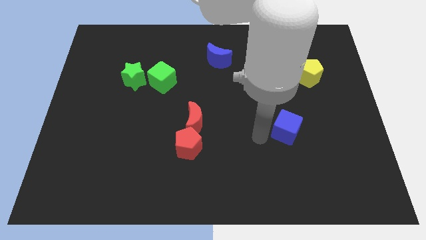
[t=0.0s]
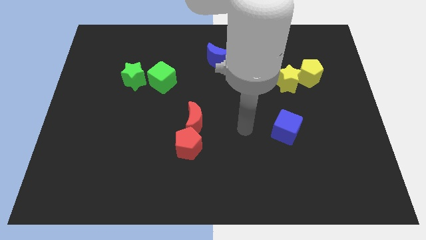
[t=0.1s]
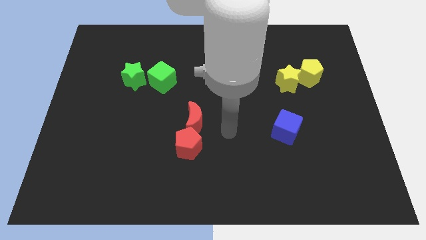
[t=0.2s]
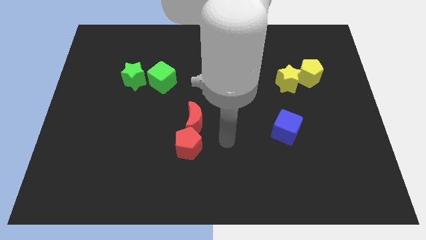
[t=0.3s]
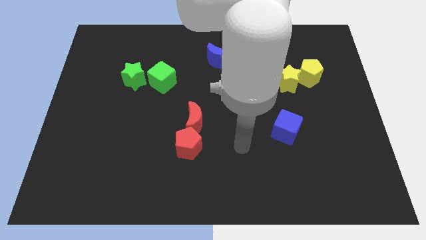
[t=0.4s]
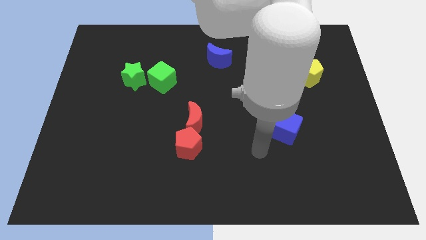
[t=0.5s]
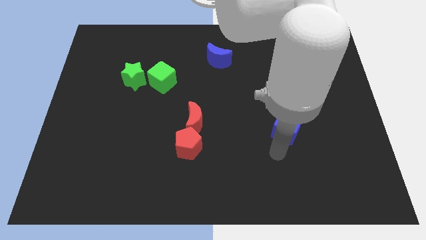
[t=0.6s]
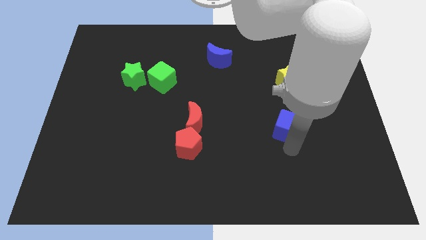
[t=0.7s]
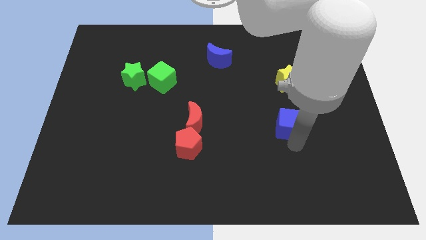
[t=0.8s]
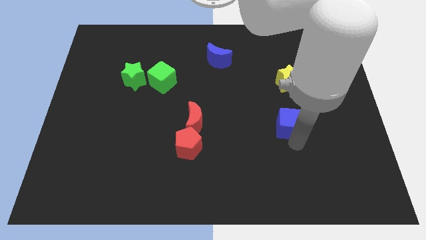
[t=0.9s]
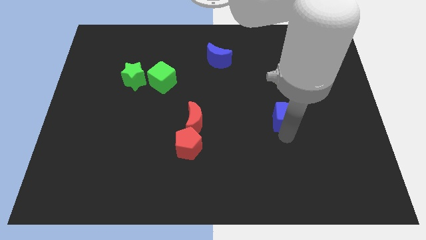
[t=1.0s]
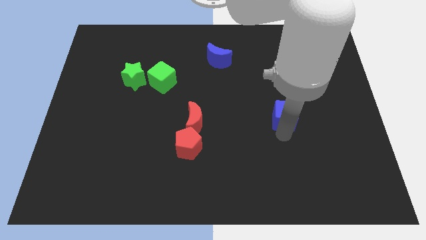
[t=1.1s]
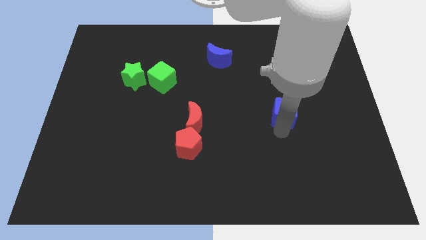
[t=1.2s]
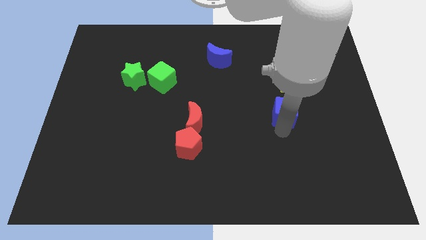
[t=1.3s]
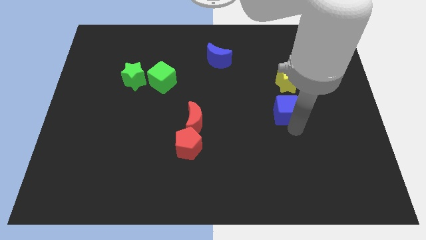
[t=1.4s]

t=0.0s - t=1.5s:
place the blue cube bellow the yellow star

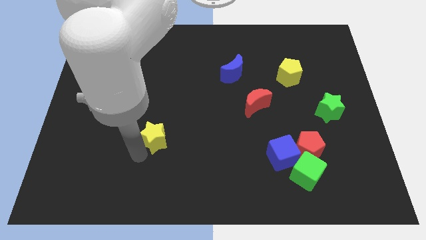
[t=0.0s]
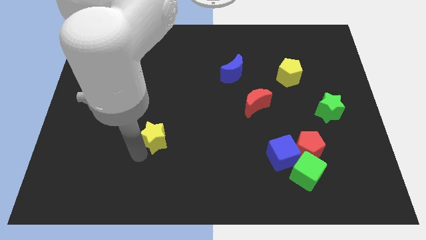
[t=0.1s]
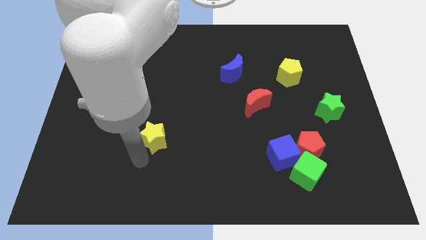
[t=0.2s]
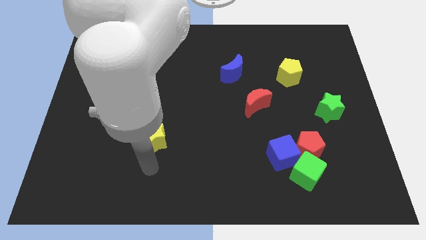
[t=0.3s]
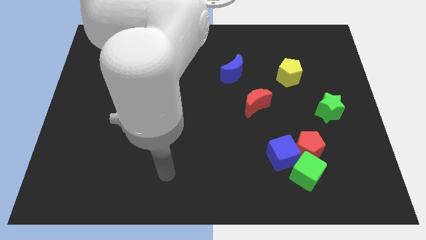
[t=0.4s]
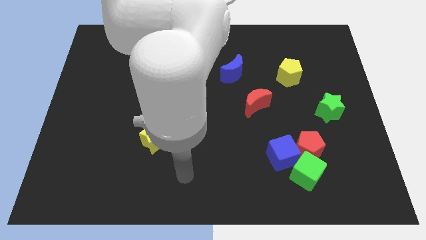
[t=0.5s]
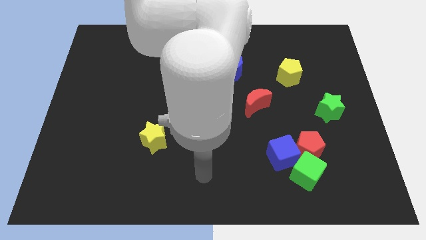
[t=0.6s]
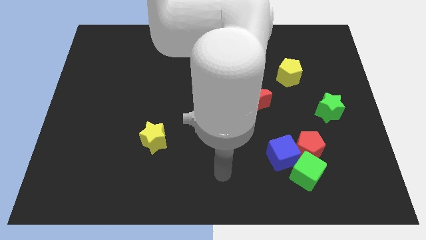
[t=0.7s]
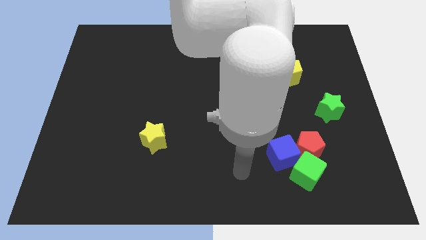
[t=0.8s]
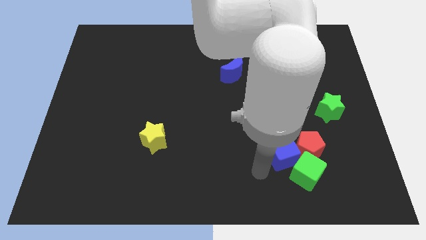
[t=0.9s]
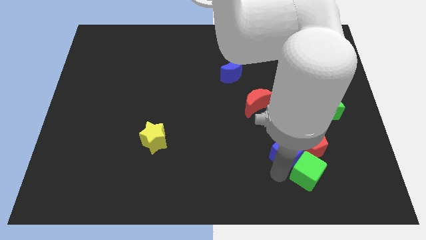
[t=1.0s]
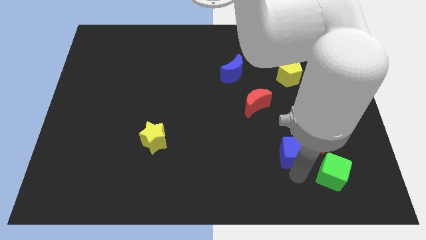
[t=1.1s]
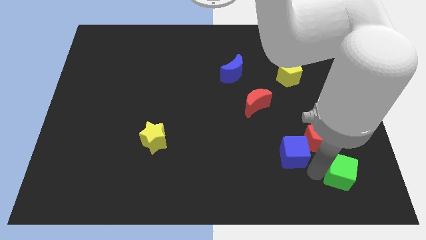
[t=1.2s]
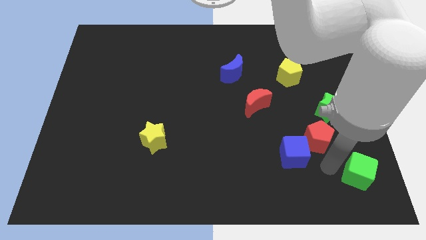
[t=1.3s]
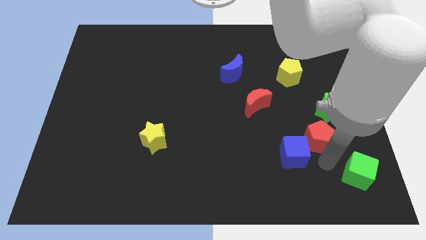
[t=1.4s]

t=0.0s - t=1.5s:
push the green cube to the bottom right of the red pentagon

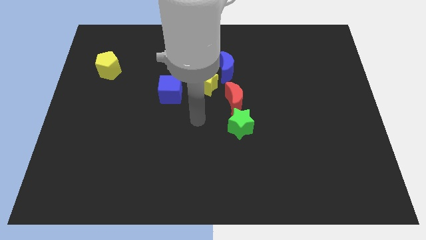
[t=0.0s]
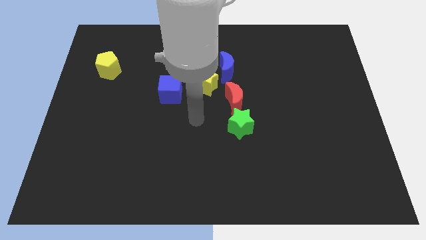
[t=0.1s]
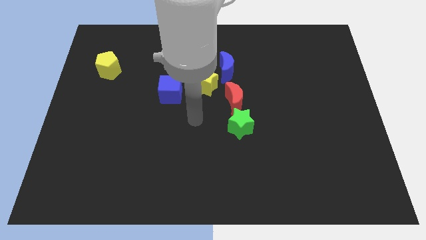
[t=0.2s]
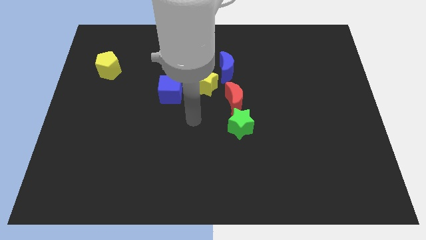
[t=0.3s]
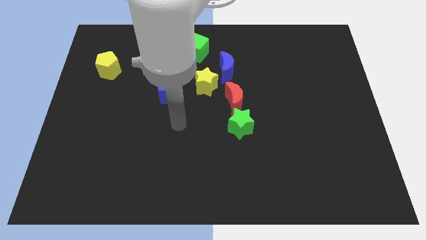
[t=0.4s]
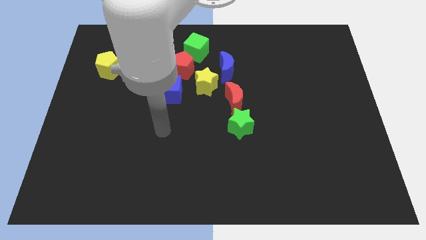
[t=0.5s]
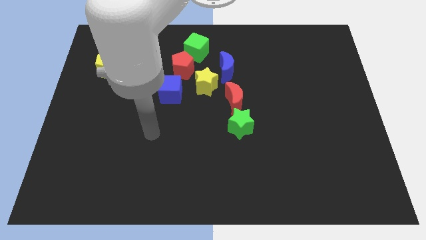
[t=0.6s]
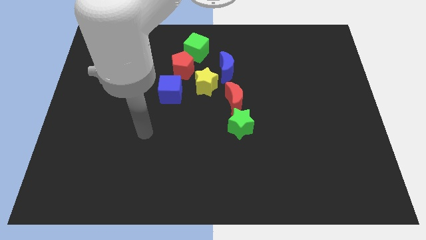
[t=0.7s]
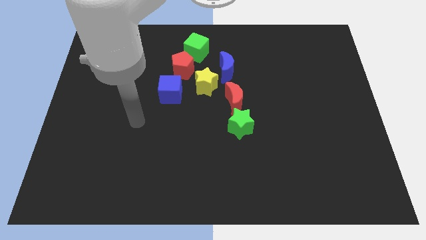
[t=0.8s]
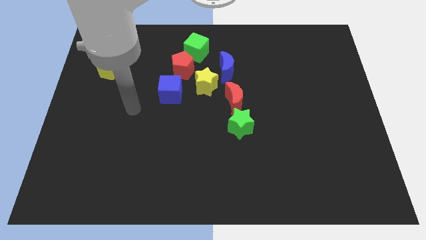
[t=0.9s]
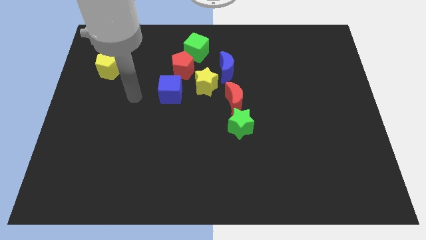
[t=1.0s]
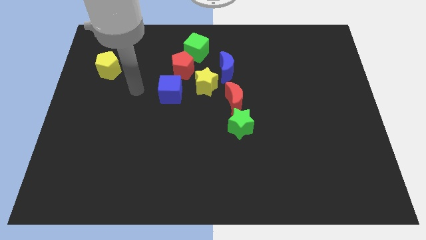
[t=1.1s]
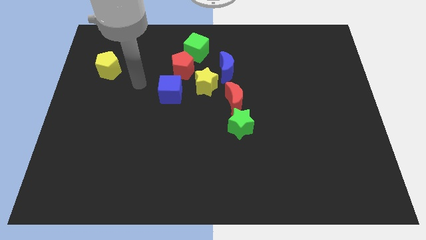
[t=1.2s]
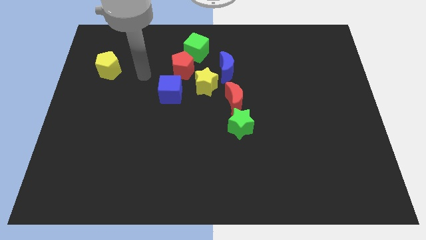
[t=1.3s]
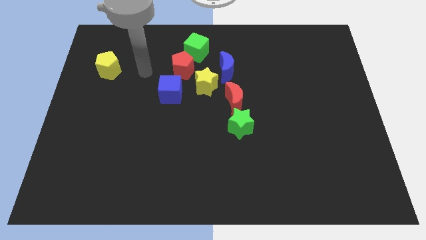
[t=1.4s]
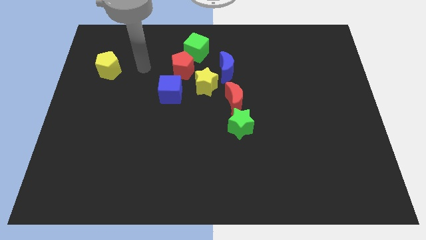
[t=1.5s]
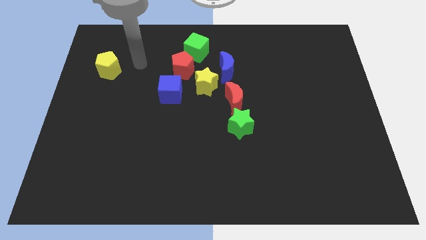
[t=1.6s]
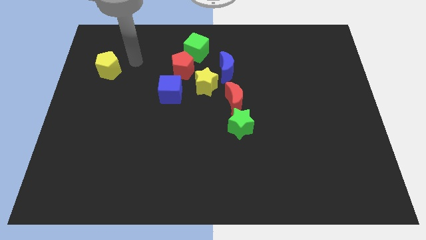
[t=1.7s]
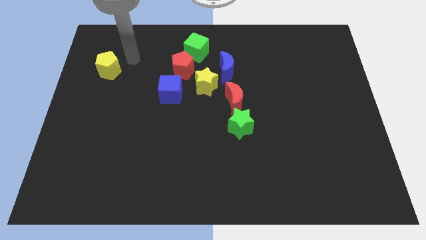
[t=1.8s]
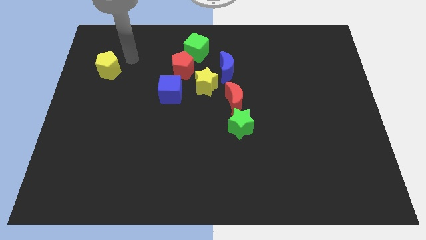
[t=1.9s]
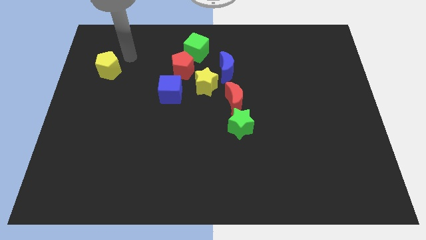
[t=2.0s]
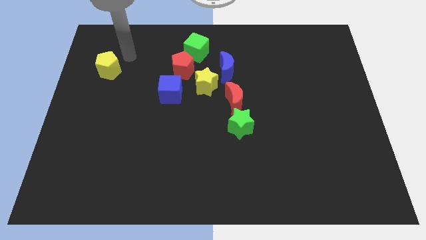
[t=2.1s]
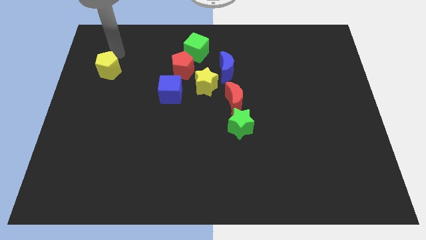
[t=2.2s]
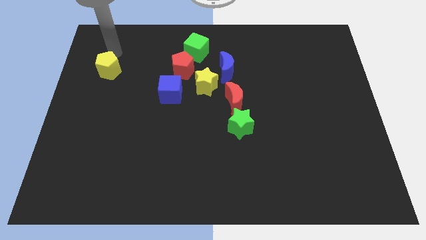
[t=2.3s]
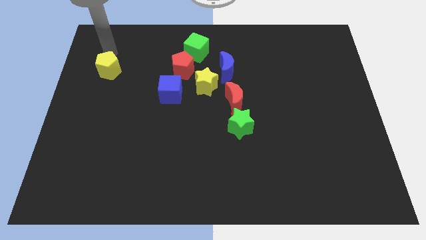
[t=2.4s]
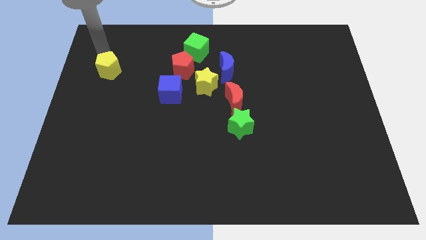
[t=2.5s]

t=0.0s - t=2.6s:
move the arm to the top of the yellow pentagon

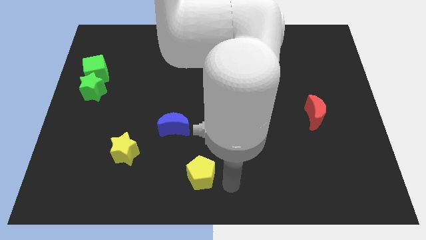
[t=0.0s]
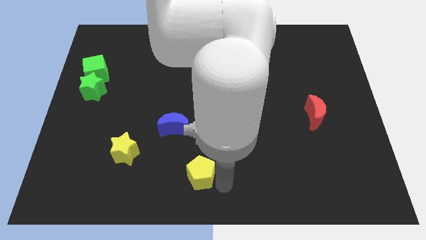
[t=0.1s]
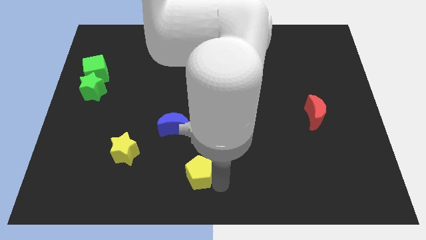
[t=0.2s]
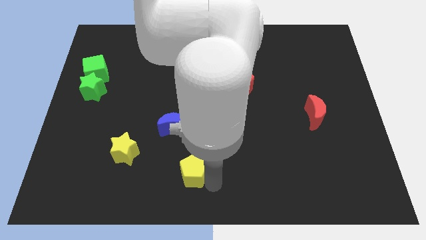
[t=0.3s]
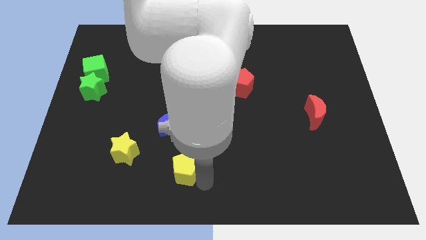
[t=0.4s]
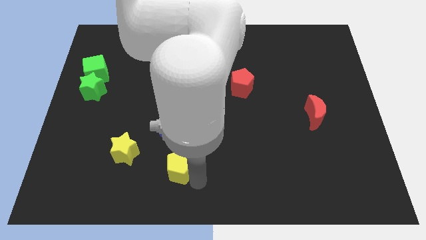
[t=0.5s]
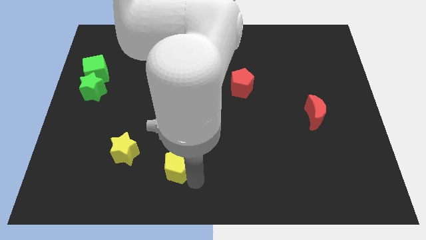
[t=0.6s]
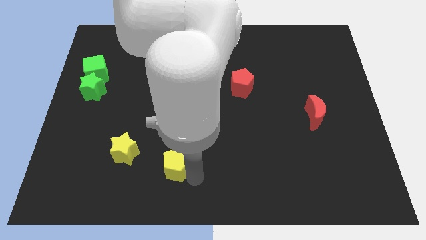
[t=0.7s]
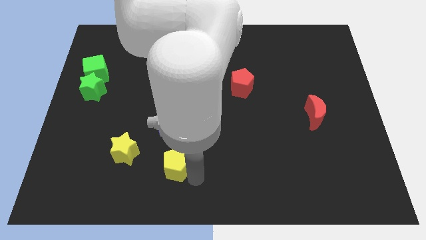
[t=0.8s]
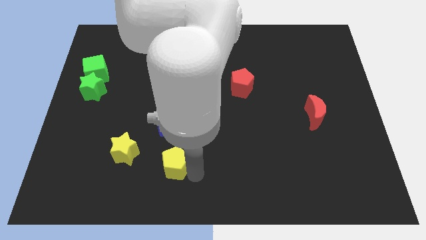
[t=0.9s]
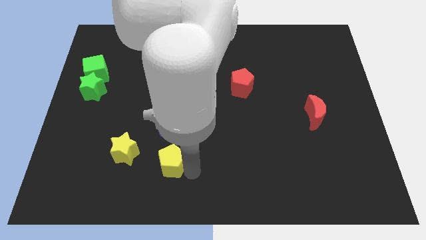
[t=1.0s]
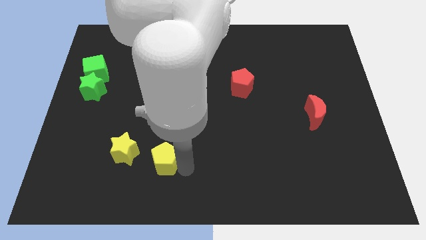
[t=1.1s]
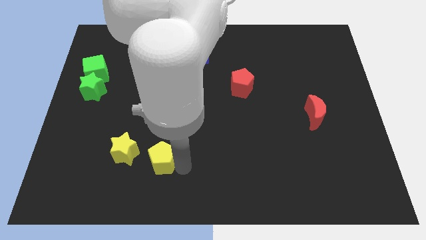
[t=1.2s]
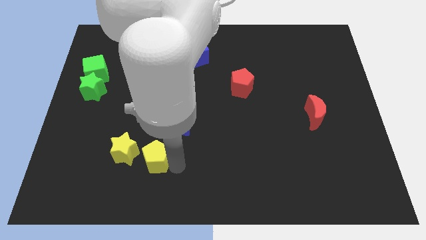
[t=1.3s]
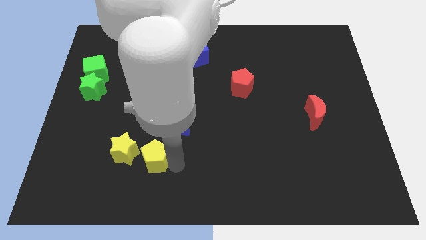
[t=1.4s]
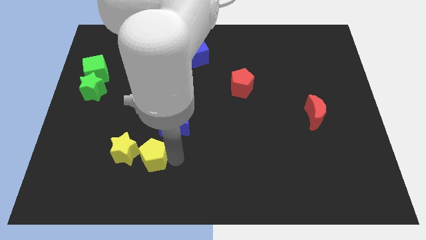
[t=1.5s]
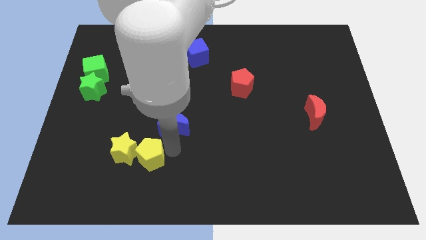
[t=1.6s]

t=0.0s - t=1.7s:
push the yellow pentagon slightly towards the yellow star

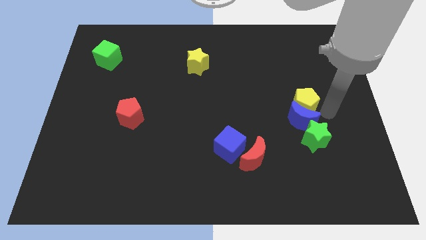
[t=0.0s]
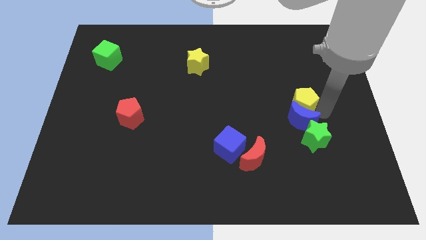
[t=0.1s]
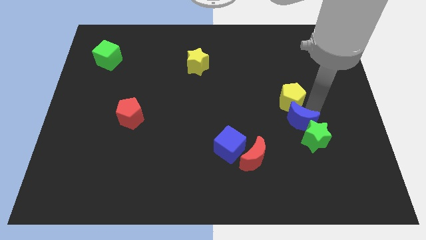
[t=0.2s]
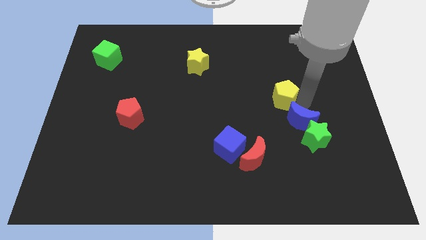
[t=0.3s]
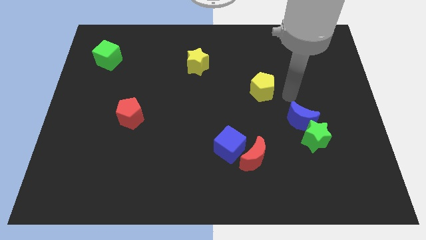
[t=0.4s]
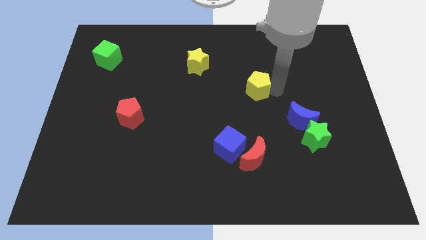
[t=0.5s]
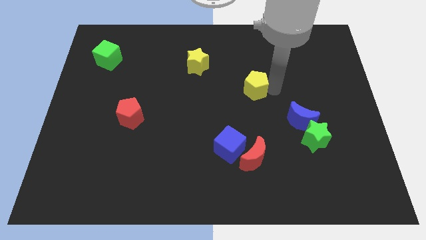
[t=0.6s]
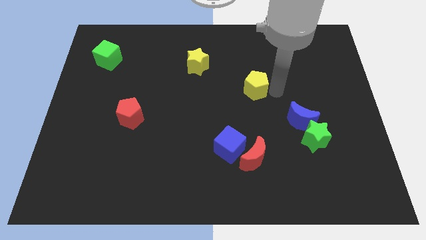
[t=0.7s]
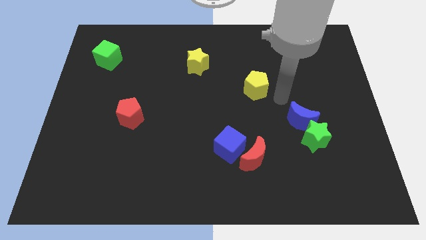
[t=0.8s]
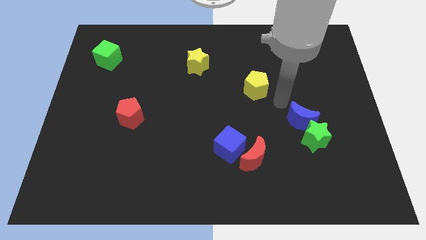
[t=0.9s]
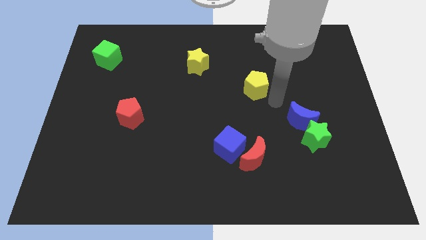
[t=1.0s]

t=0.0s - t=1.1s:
push yellow pentagon diagonally in between yellow star and blue crescent

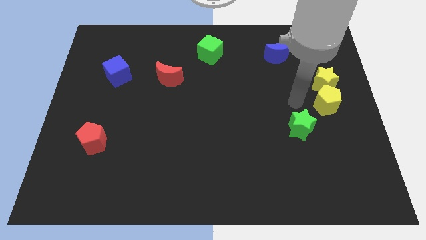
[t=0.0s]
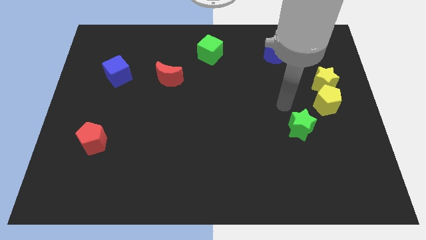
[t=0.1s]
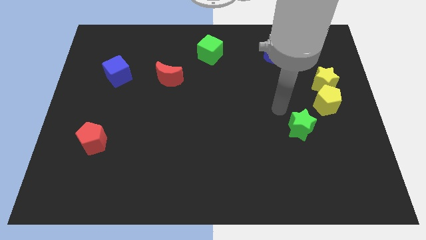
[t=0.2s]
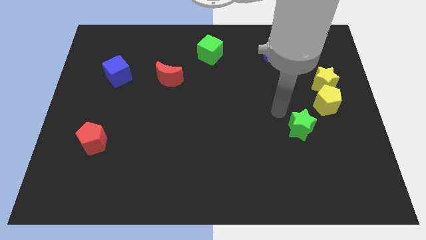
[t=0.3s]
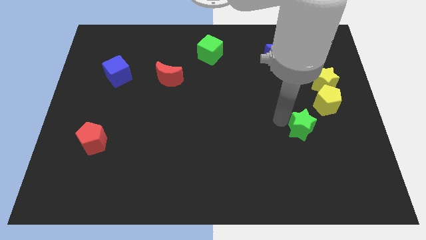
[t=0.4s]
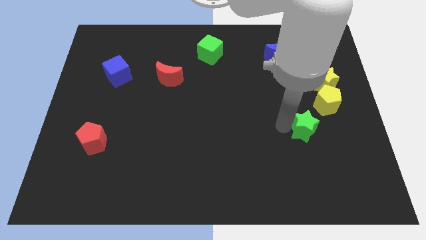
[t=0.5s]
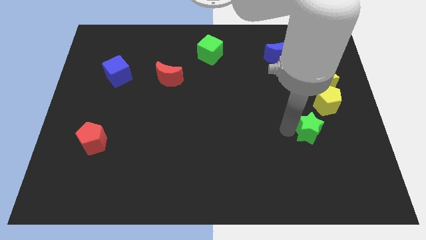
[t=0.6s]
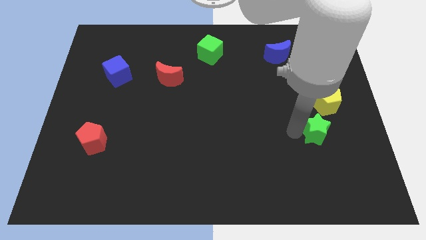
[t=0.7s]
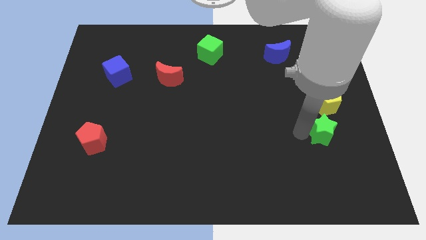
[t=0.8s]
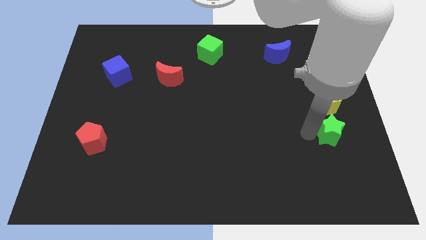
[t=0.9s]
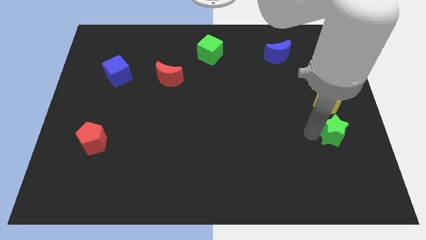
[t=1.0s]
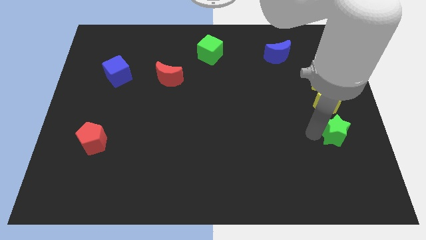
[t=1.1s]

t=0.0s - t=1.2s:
put the green star below the yellow star
